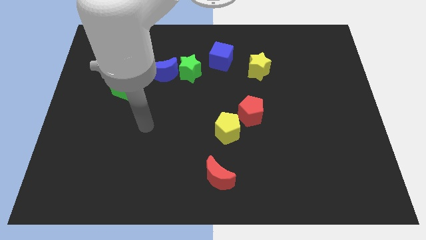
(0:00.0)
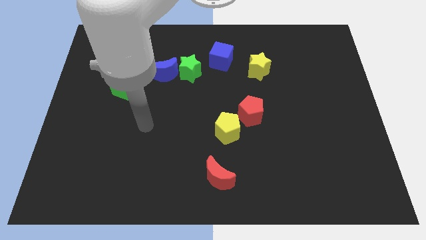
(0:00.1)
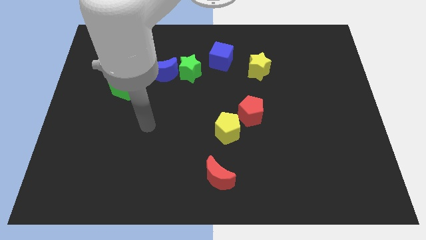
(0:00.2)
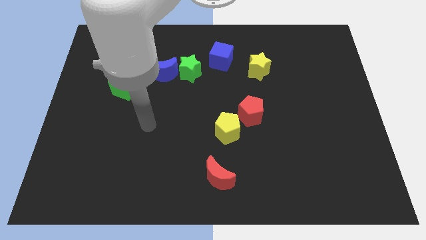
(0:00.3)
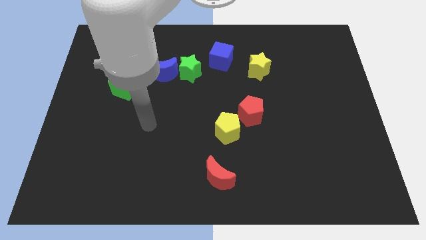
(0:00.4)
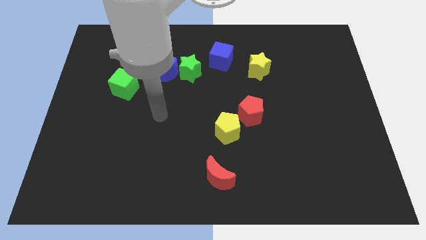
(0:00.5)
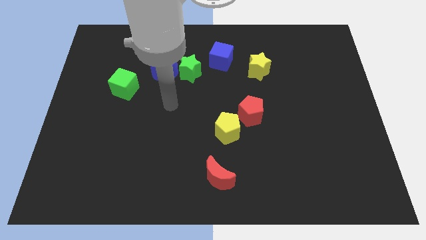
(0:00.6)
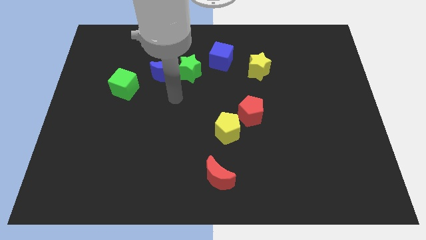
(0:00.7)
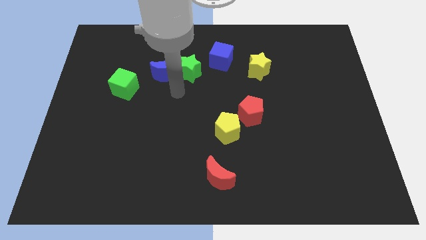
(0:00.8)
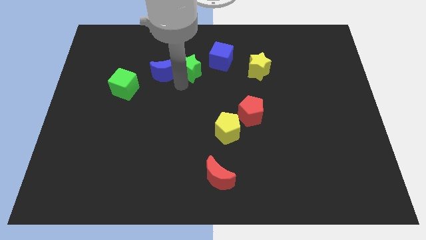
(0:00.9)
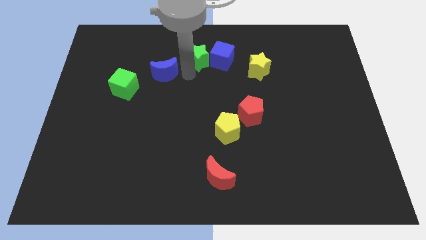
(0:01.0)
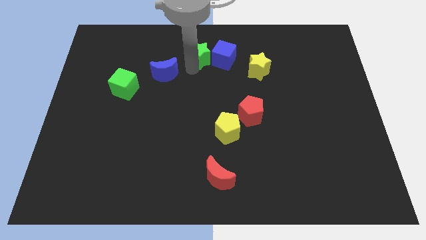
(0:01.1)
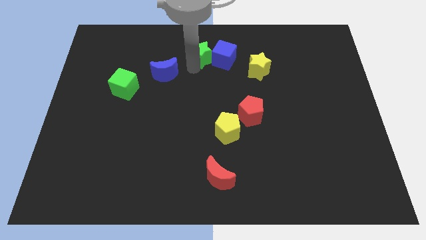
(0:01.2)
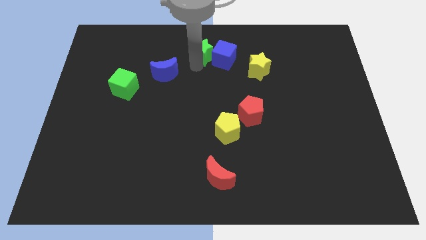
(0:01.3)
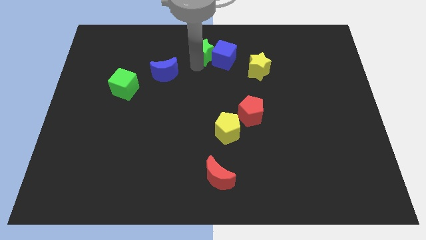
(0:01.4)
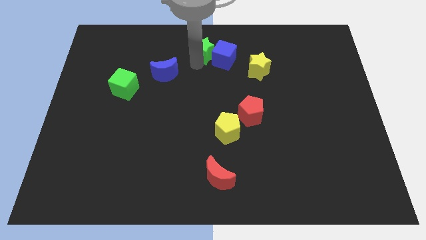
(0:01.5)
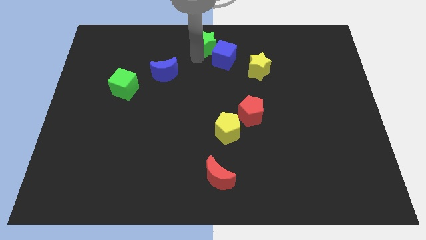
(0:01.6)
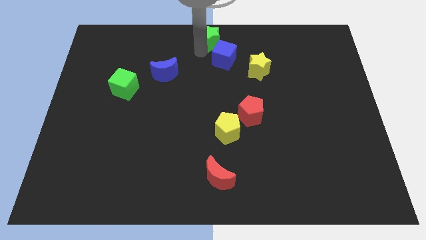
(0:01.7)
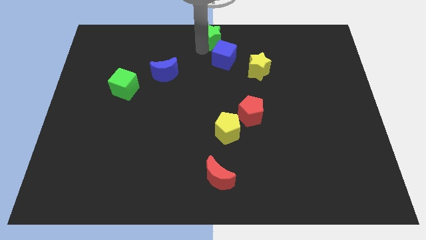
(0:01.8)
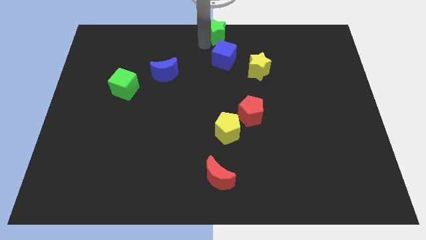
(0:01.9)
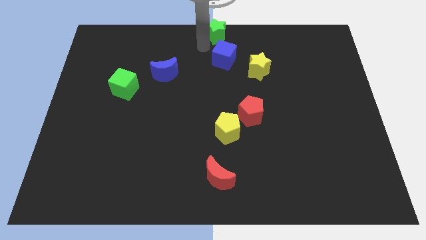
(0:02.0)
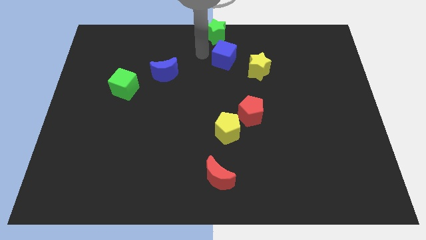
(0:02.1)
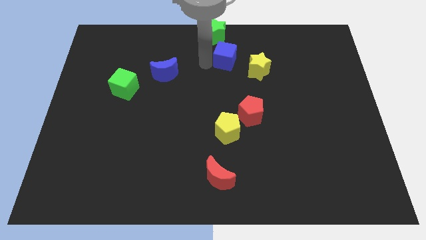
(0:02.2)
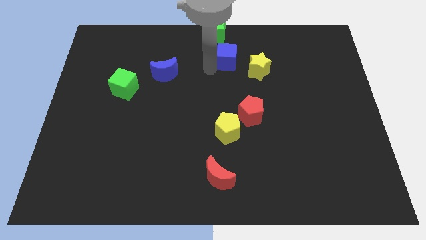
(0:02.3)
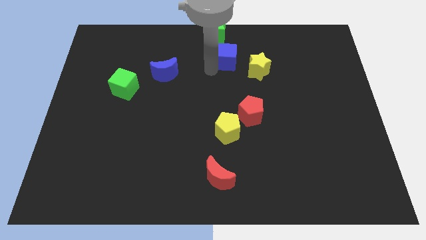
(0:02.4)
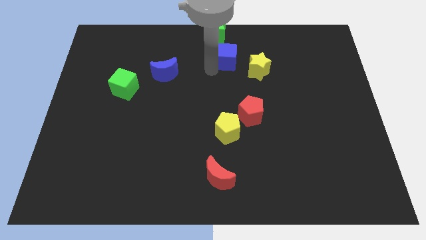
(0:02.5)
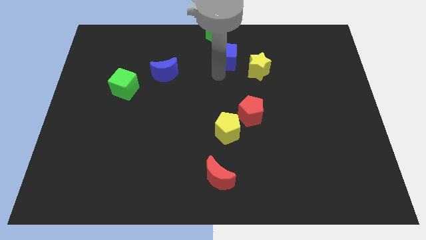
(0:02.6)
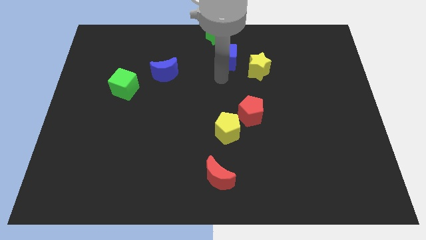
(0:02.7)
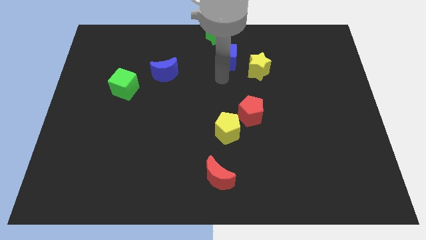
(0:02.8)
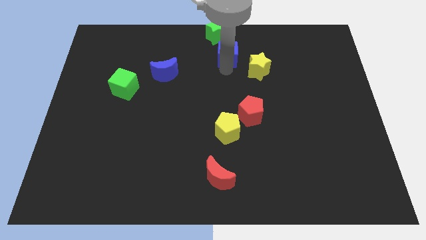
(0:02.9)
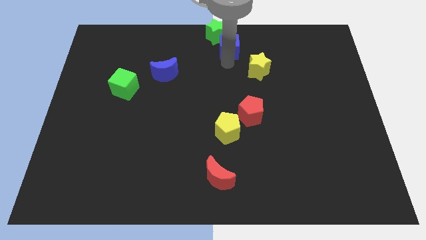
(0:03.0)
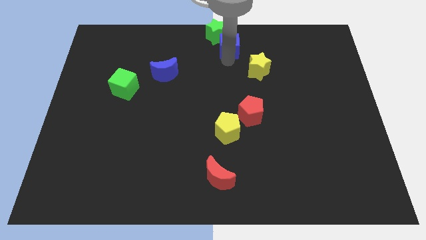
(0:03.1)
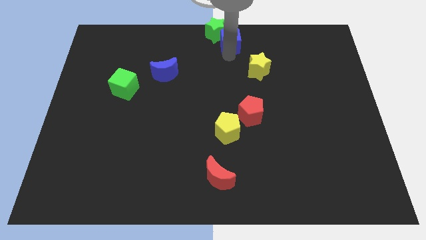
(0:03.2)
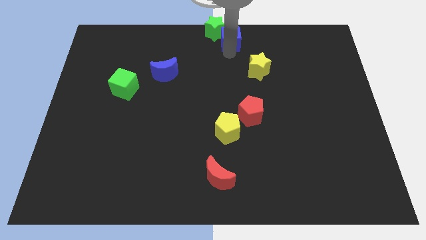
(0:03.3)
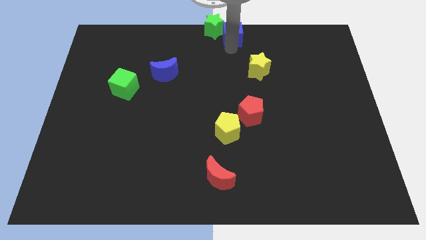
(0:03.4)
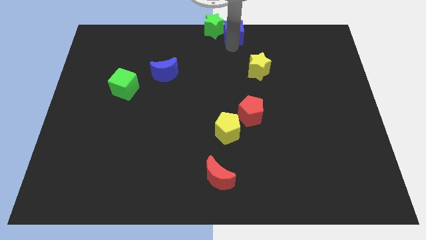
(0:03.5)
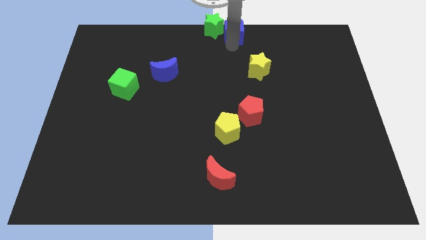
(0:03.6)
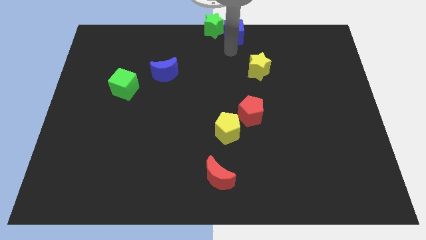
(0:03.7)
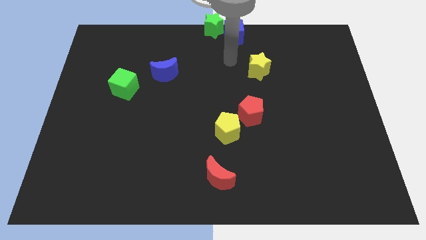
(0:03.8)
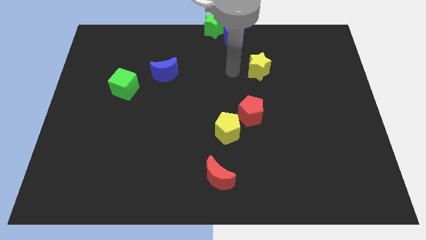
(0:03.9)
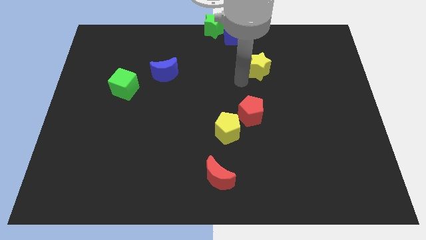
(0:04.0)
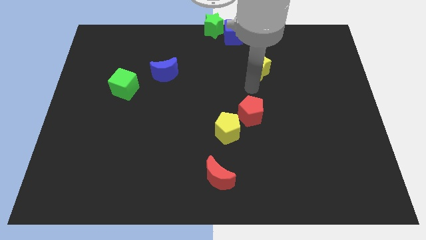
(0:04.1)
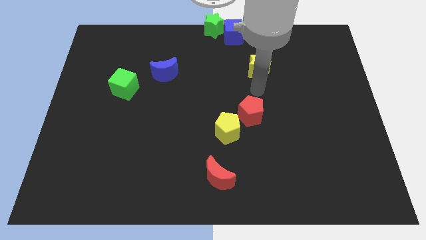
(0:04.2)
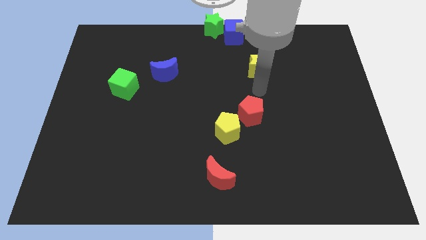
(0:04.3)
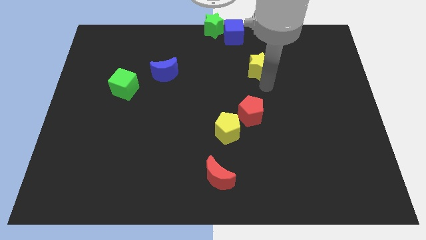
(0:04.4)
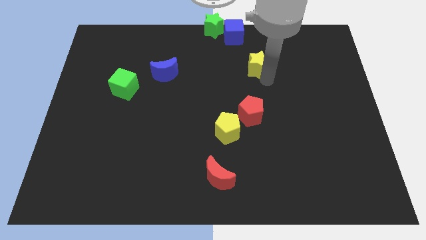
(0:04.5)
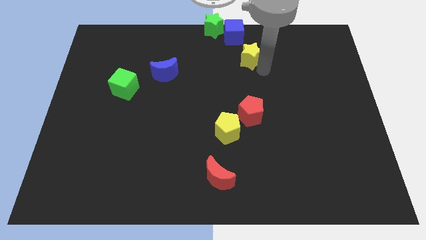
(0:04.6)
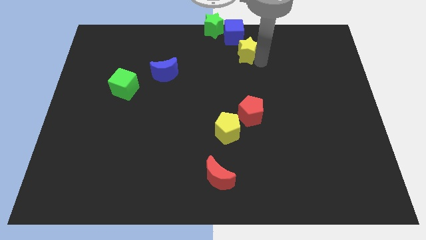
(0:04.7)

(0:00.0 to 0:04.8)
push the green star towards the top center of the board

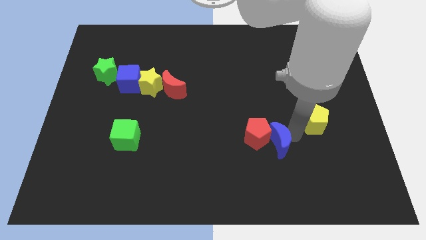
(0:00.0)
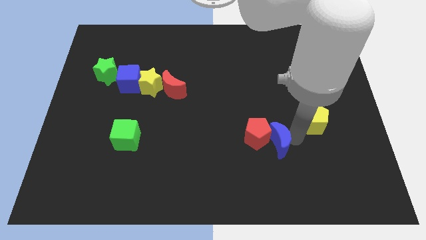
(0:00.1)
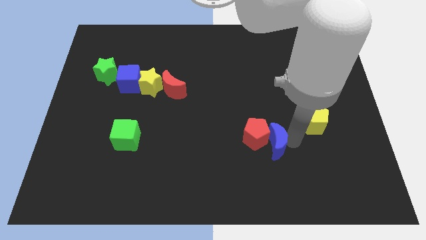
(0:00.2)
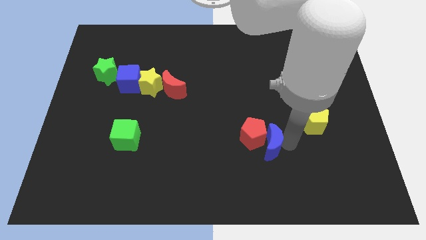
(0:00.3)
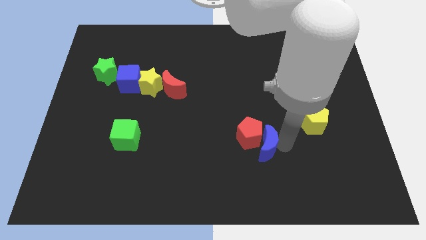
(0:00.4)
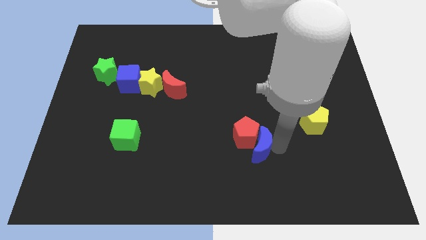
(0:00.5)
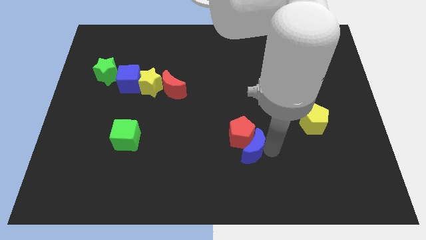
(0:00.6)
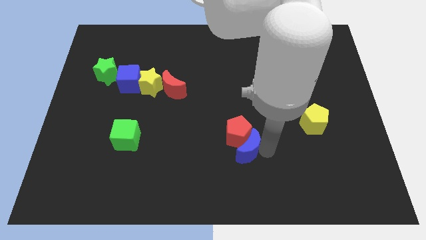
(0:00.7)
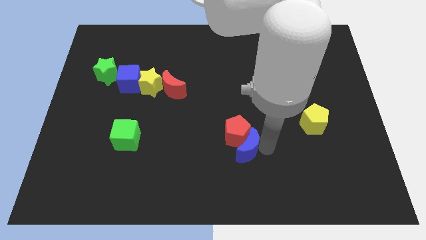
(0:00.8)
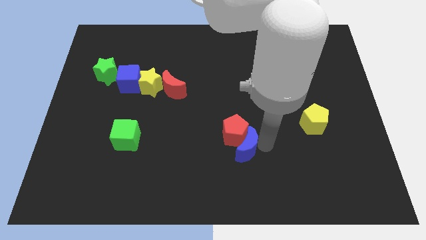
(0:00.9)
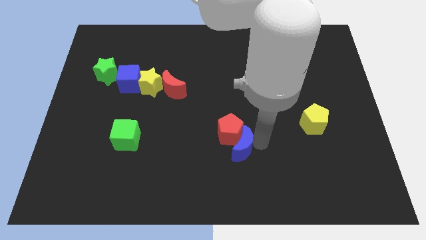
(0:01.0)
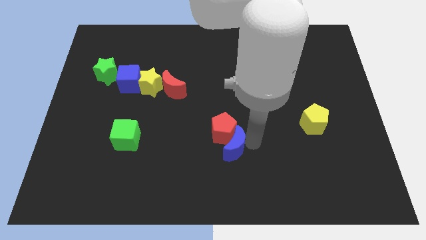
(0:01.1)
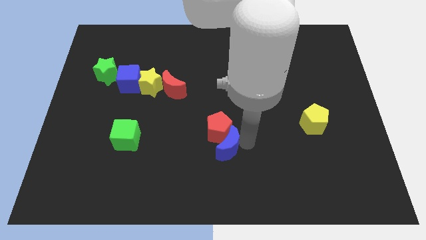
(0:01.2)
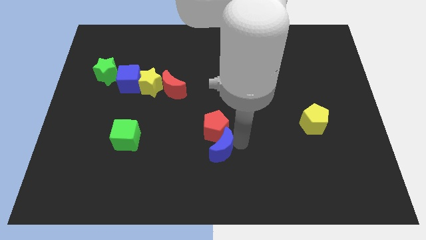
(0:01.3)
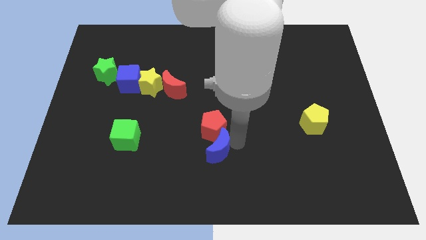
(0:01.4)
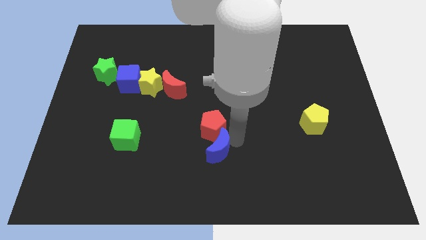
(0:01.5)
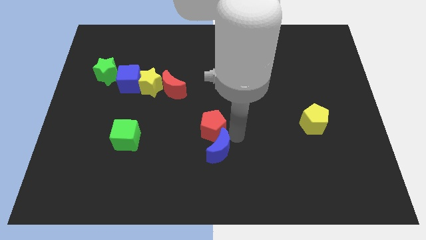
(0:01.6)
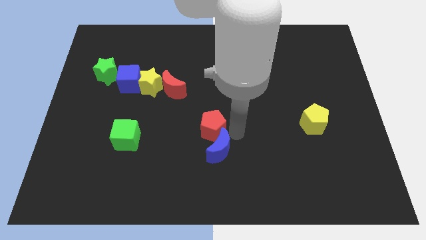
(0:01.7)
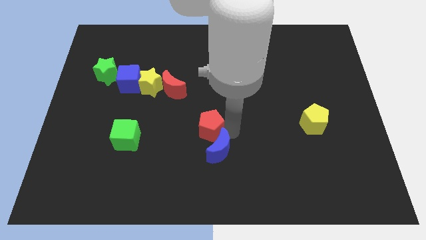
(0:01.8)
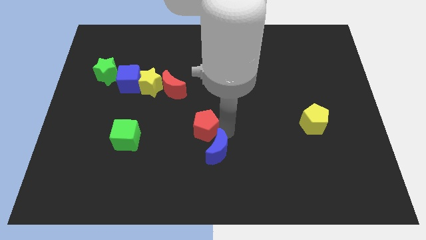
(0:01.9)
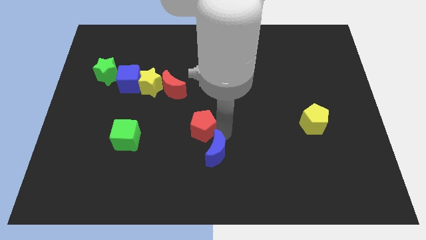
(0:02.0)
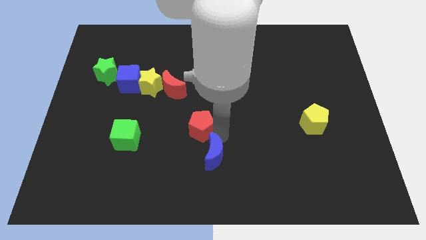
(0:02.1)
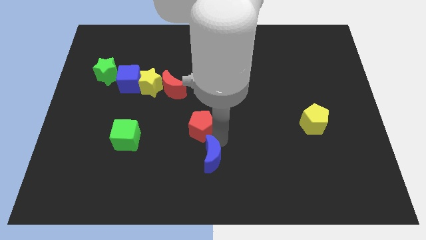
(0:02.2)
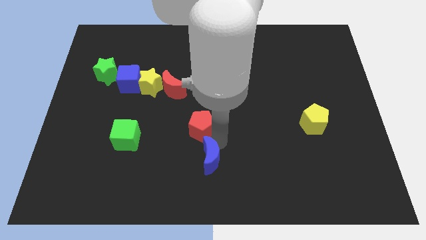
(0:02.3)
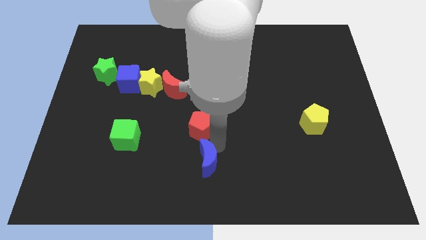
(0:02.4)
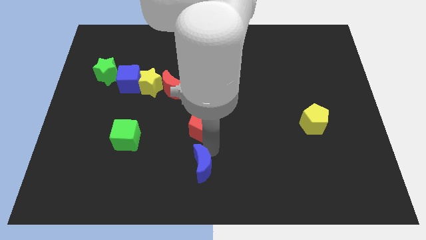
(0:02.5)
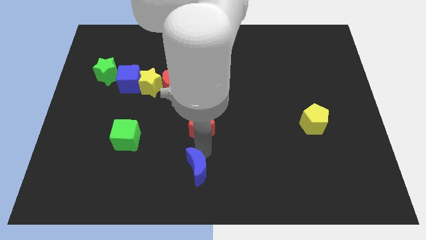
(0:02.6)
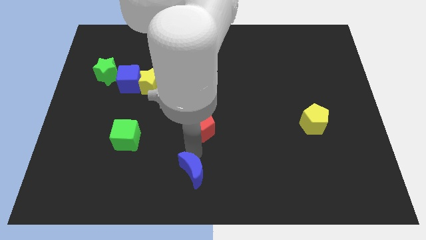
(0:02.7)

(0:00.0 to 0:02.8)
push the blue moon and red pentagon towards the left side of the board

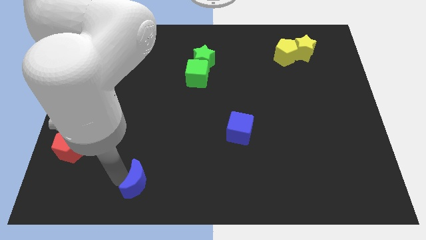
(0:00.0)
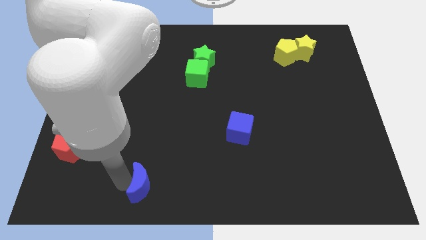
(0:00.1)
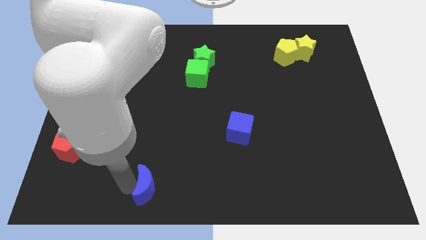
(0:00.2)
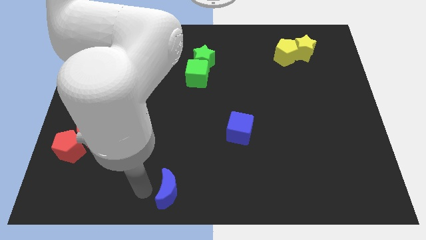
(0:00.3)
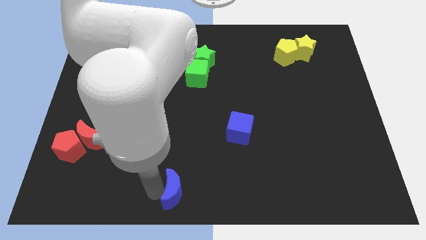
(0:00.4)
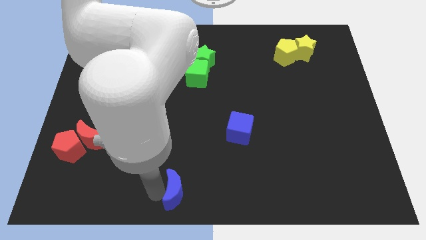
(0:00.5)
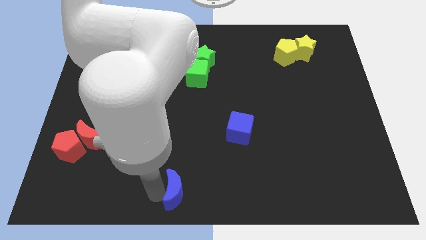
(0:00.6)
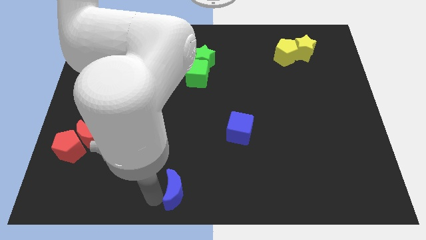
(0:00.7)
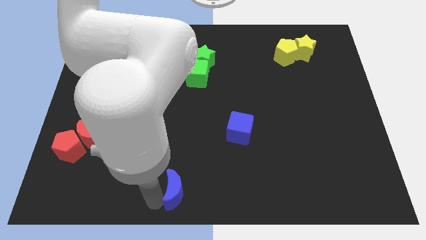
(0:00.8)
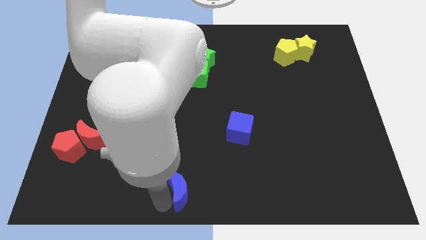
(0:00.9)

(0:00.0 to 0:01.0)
push the blue crescent to the right of the board

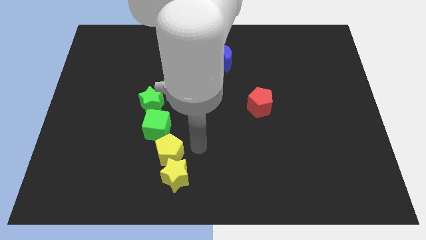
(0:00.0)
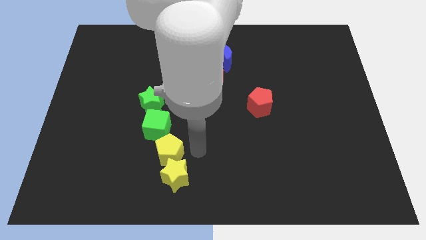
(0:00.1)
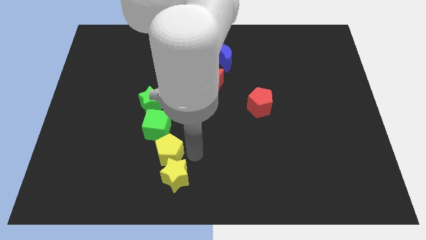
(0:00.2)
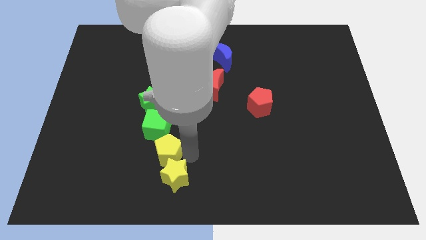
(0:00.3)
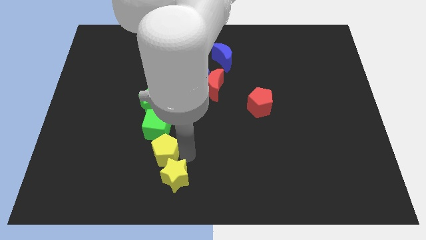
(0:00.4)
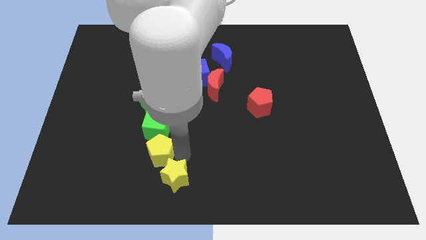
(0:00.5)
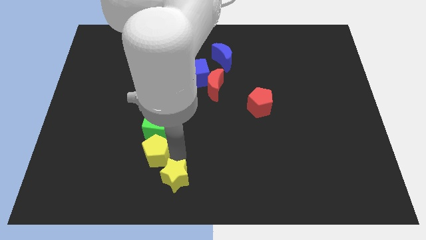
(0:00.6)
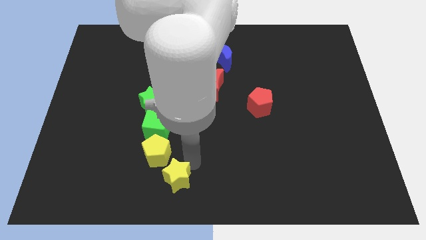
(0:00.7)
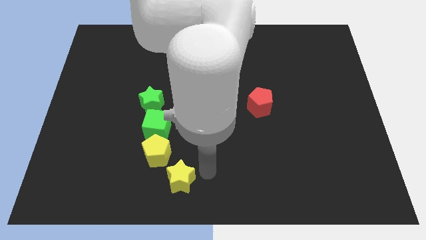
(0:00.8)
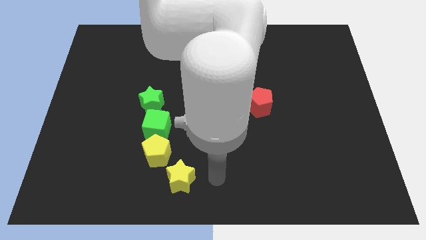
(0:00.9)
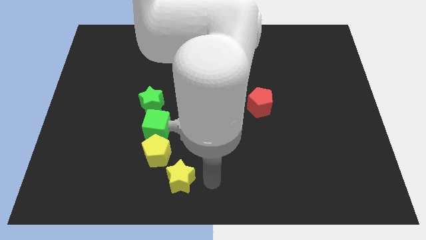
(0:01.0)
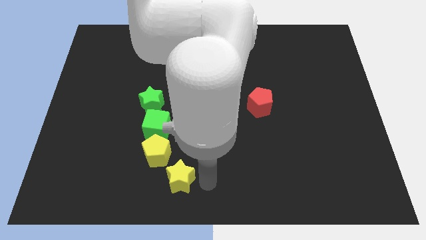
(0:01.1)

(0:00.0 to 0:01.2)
place yellow pentagon down to the green cube
